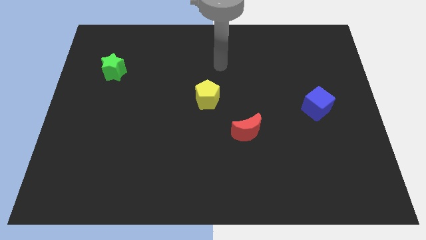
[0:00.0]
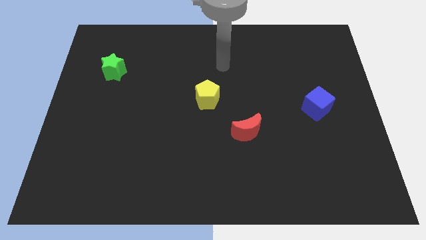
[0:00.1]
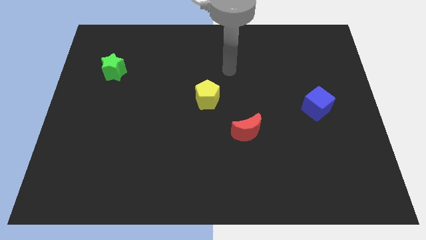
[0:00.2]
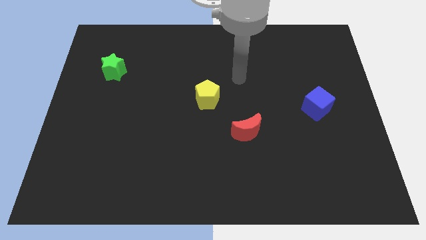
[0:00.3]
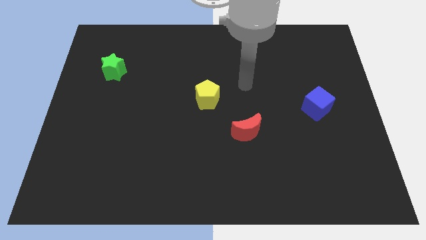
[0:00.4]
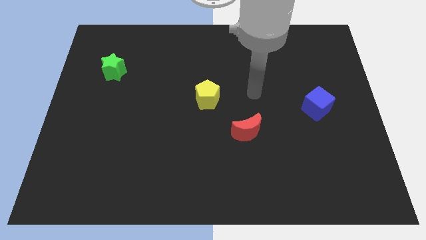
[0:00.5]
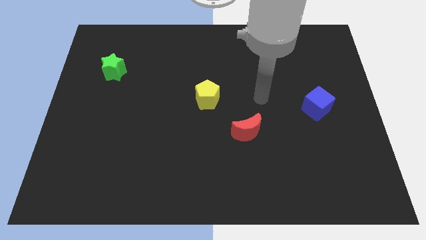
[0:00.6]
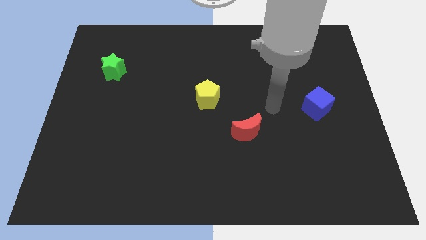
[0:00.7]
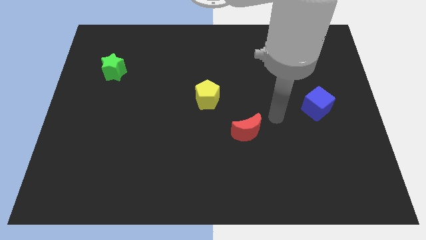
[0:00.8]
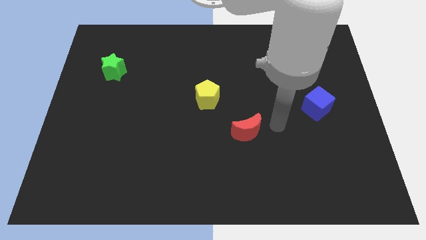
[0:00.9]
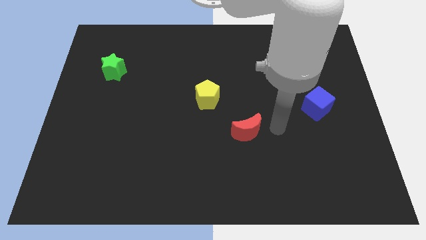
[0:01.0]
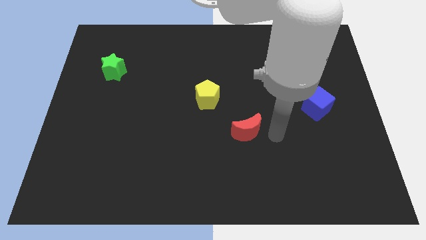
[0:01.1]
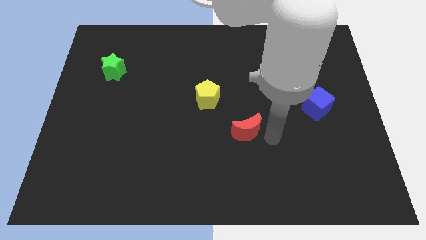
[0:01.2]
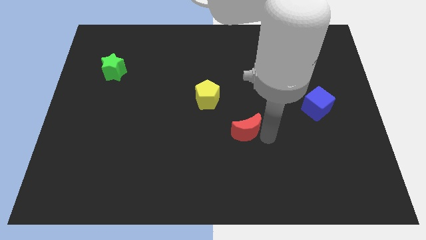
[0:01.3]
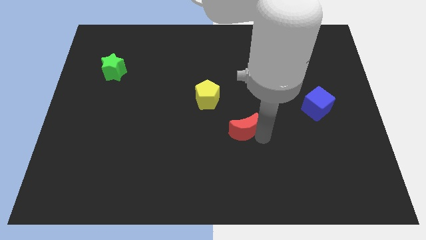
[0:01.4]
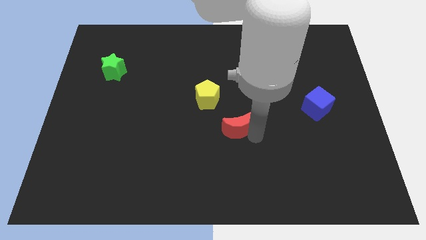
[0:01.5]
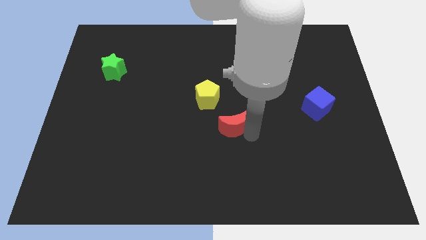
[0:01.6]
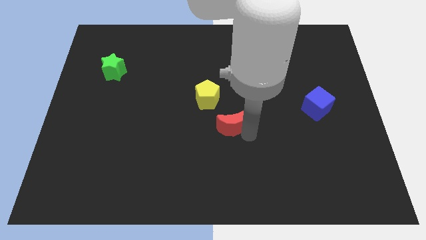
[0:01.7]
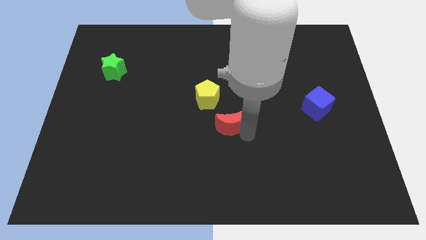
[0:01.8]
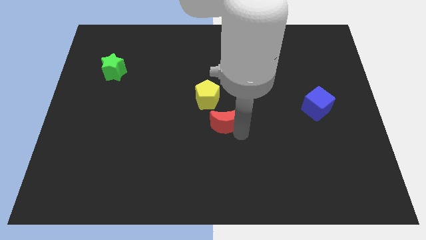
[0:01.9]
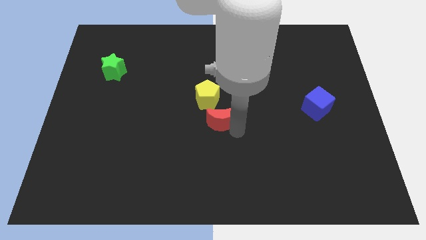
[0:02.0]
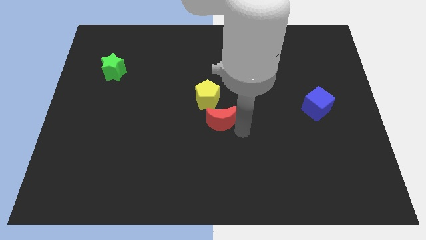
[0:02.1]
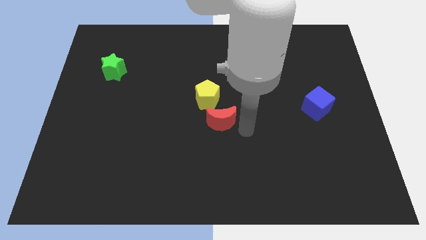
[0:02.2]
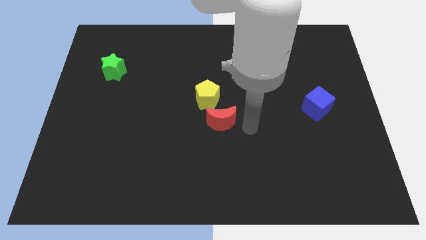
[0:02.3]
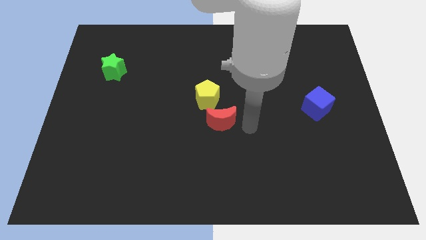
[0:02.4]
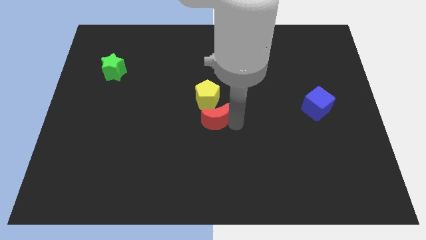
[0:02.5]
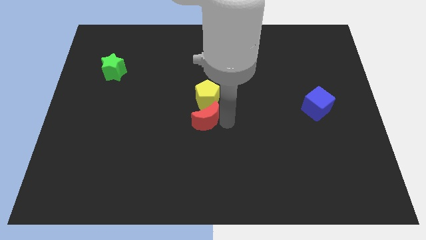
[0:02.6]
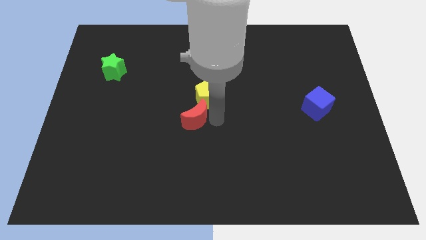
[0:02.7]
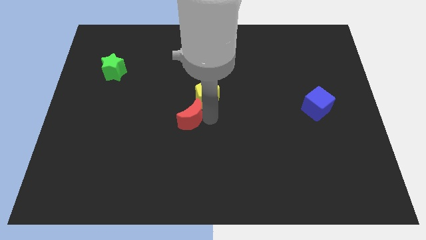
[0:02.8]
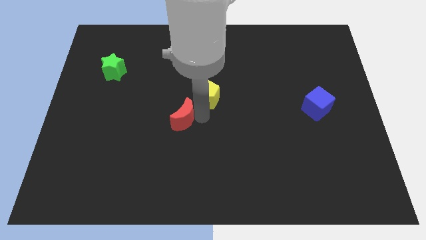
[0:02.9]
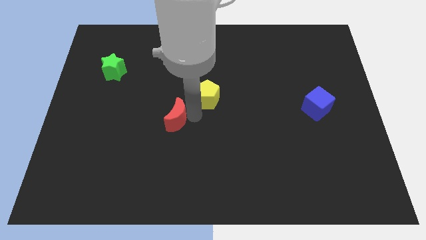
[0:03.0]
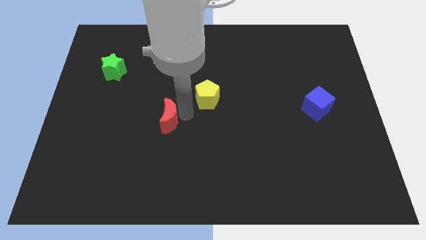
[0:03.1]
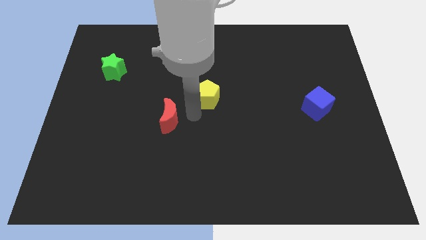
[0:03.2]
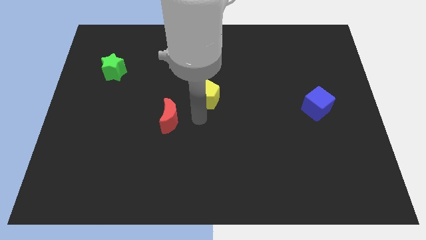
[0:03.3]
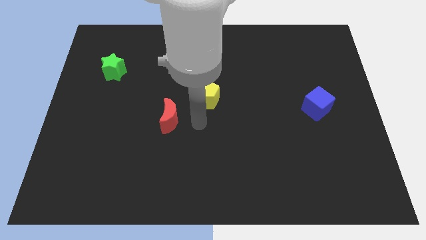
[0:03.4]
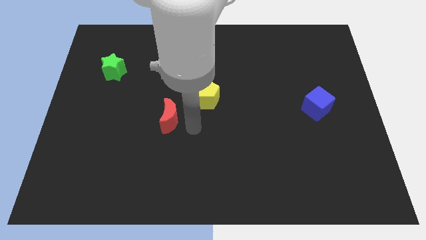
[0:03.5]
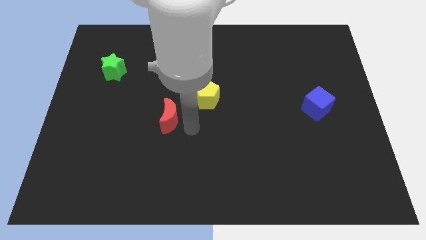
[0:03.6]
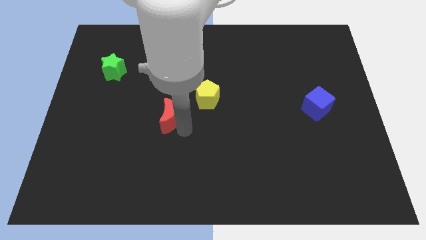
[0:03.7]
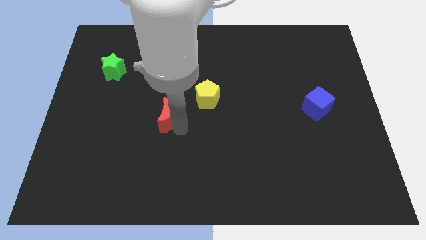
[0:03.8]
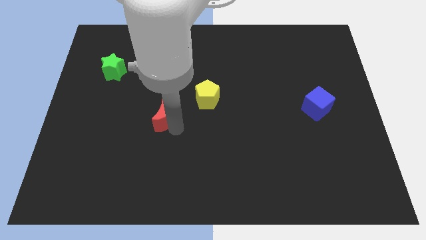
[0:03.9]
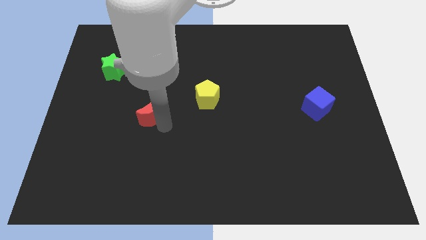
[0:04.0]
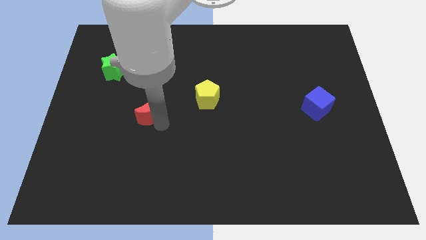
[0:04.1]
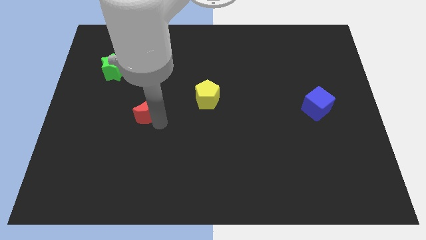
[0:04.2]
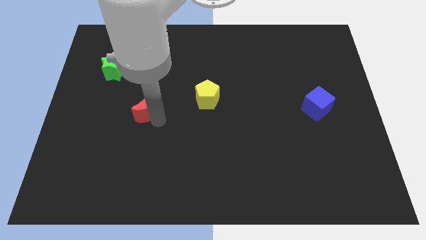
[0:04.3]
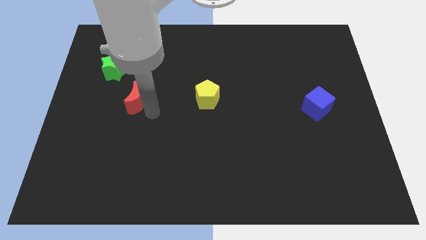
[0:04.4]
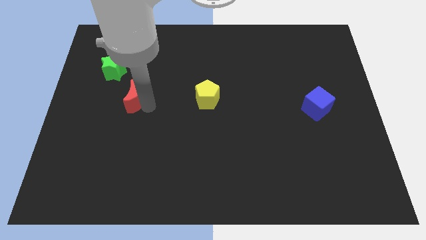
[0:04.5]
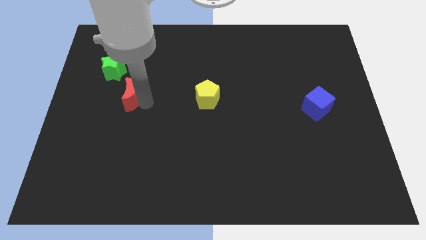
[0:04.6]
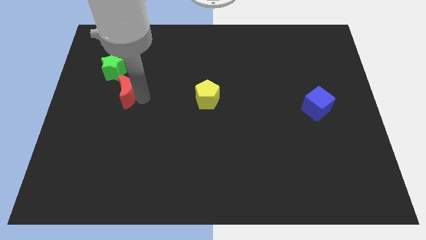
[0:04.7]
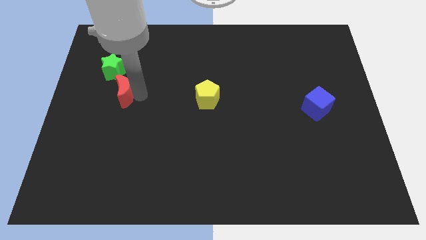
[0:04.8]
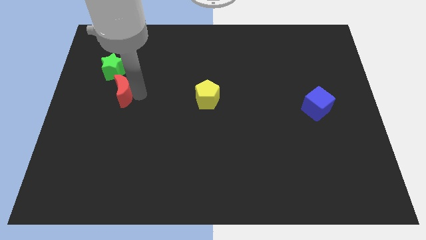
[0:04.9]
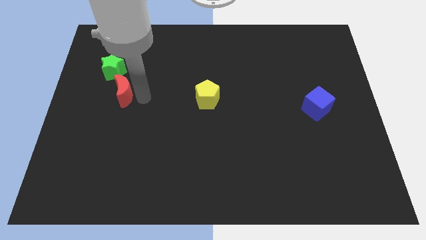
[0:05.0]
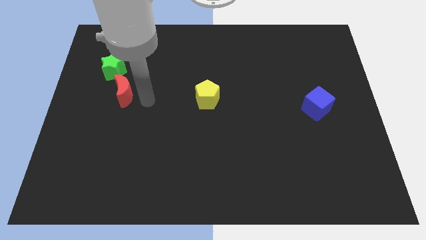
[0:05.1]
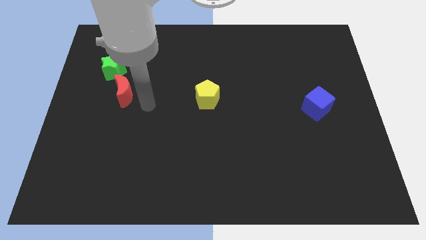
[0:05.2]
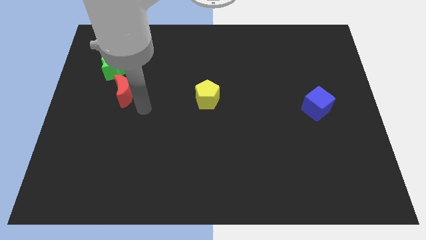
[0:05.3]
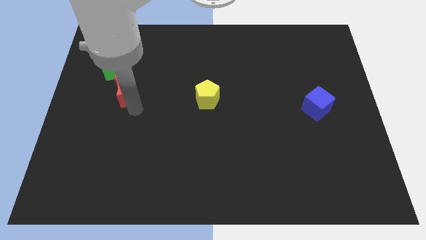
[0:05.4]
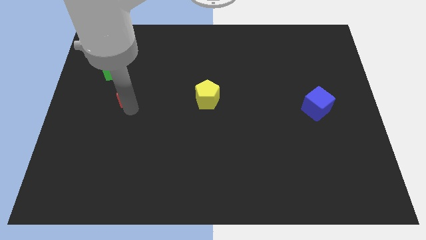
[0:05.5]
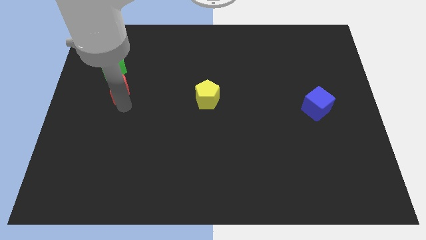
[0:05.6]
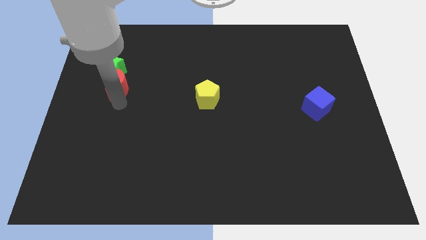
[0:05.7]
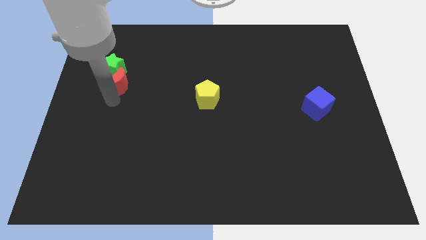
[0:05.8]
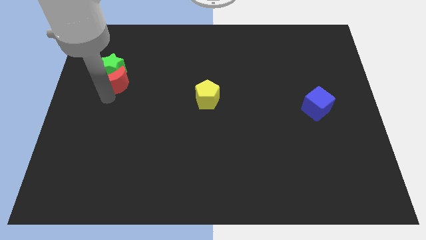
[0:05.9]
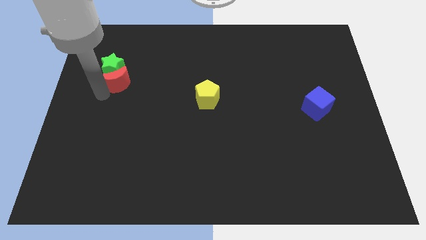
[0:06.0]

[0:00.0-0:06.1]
slide the red moon towards the green star

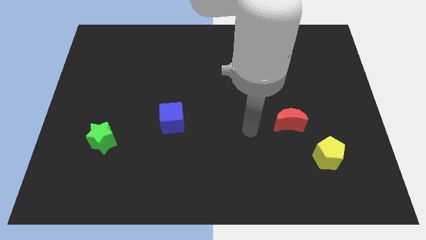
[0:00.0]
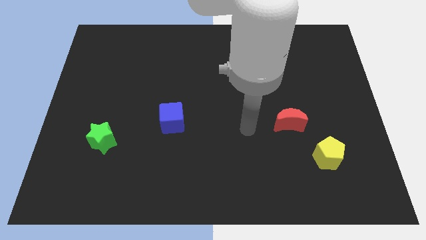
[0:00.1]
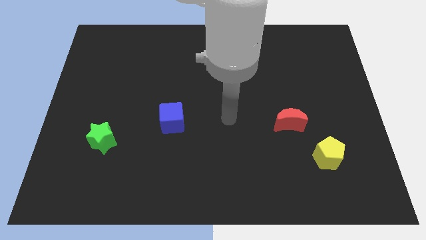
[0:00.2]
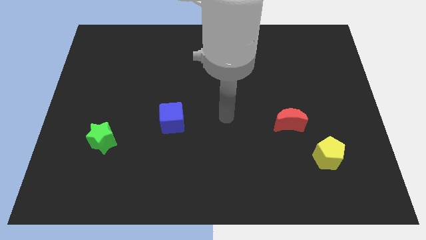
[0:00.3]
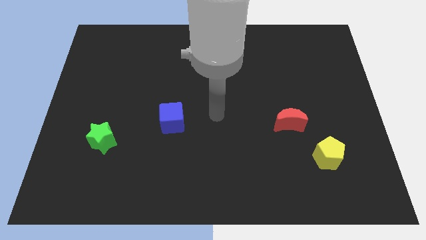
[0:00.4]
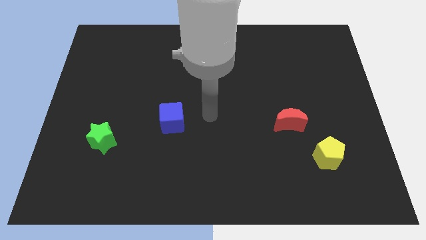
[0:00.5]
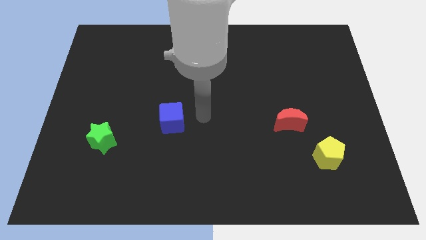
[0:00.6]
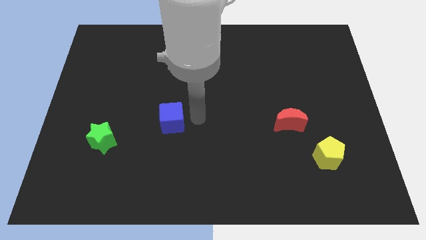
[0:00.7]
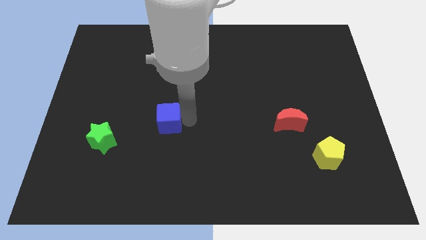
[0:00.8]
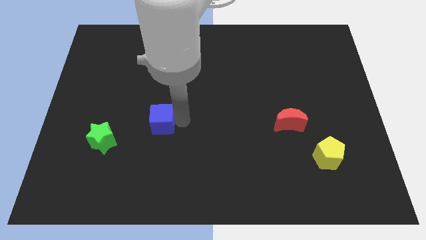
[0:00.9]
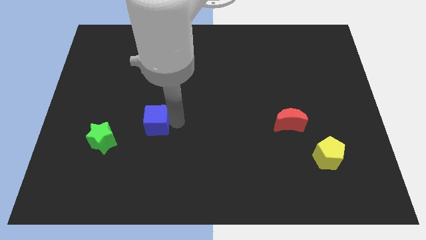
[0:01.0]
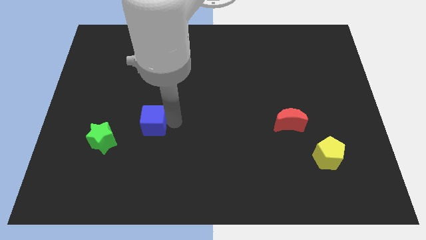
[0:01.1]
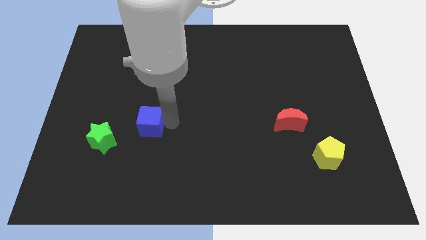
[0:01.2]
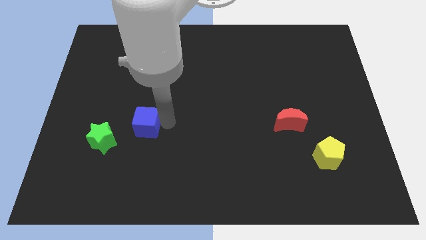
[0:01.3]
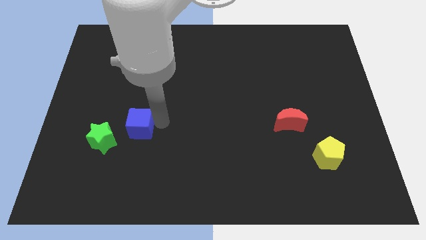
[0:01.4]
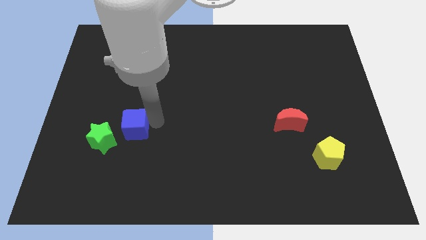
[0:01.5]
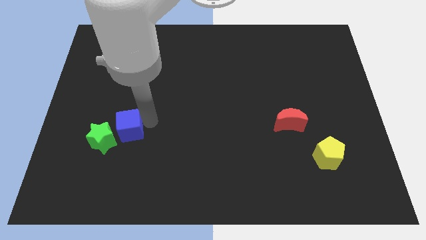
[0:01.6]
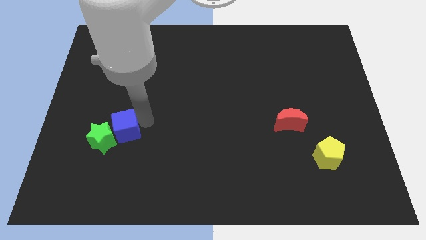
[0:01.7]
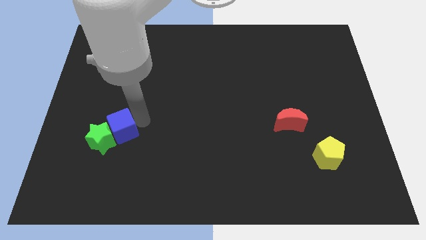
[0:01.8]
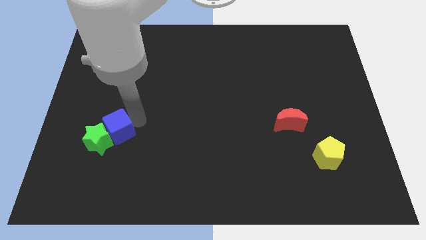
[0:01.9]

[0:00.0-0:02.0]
move the blue cube towards the green block
